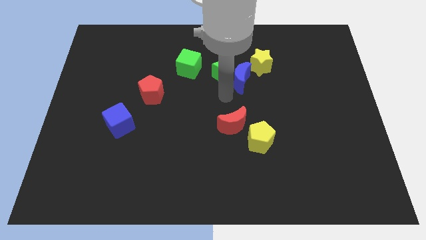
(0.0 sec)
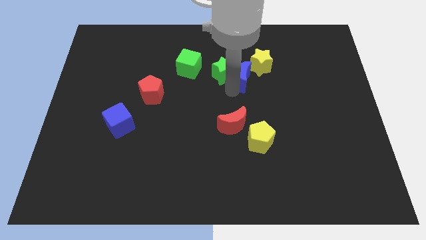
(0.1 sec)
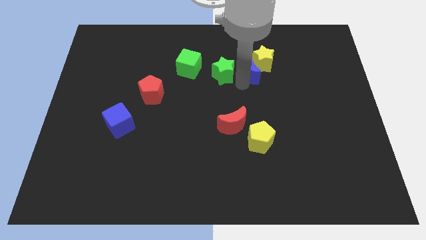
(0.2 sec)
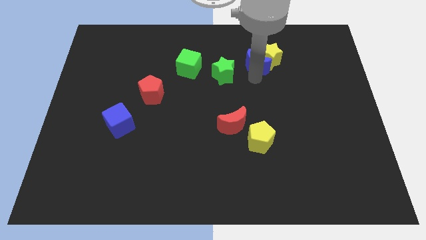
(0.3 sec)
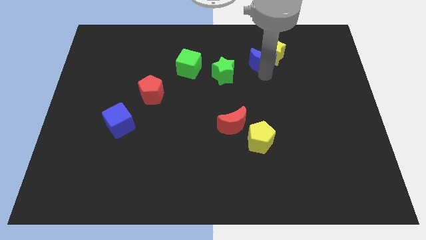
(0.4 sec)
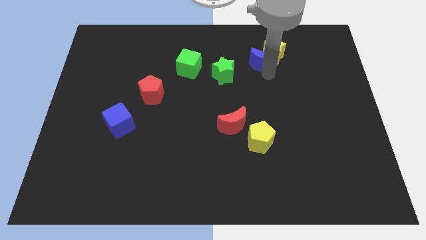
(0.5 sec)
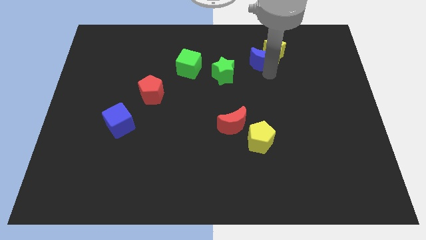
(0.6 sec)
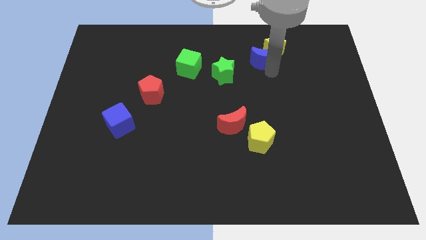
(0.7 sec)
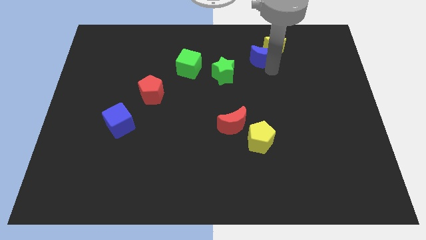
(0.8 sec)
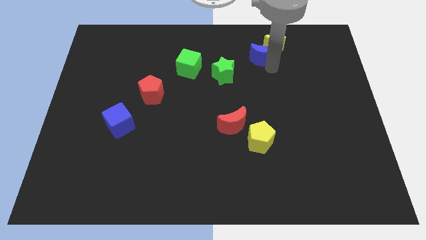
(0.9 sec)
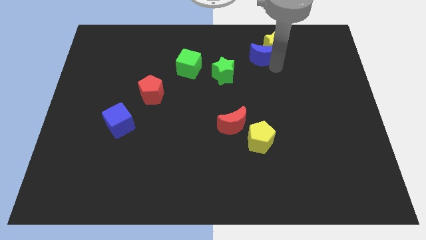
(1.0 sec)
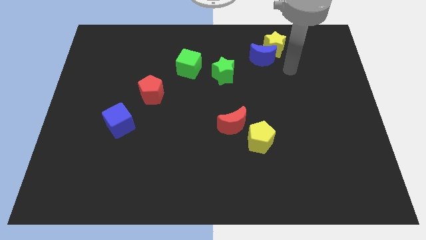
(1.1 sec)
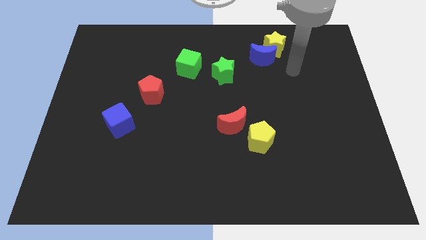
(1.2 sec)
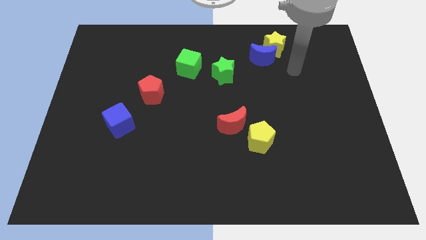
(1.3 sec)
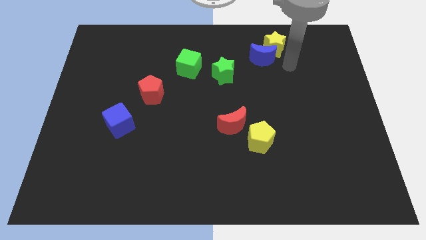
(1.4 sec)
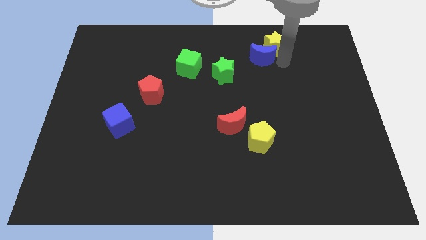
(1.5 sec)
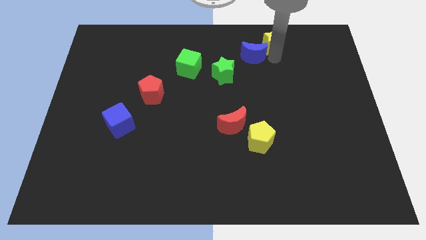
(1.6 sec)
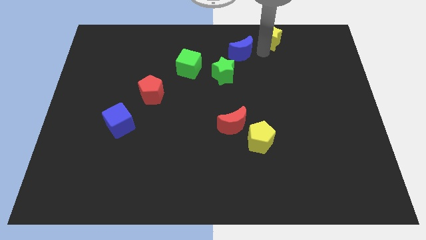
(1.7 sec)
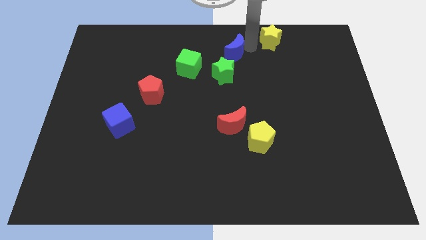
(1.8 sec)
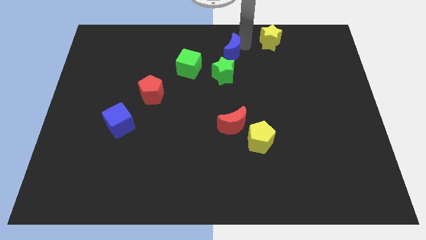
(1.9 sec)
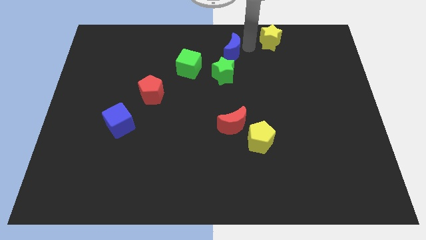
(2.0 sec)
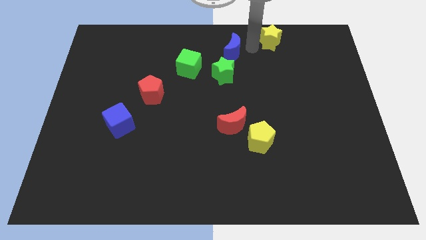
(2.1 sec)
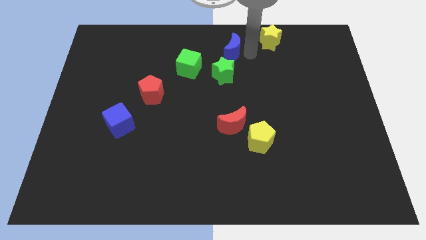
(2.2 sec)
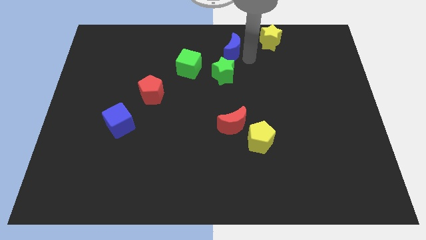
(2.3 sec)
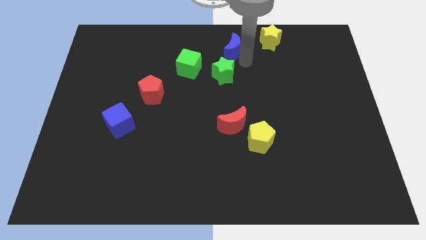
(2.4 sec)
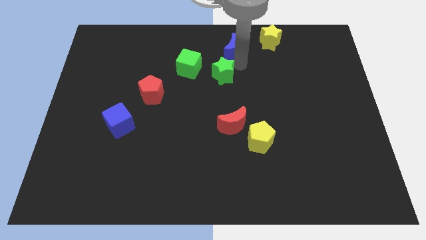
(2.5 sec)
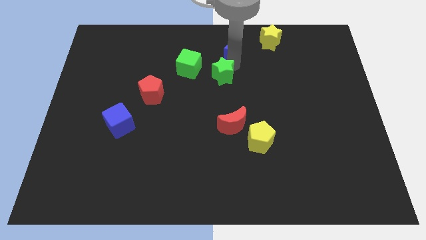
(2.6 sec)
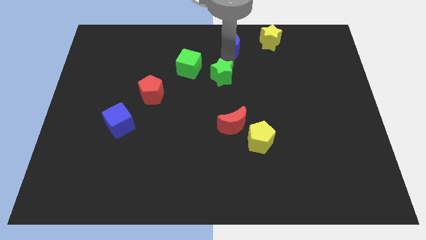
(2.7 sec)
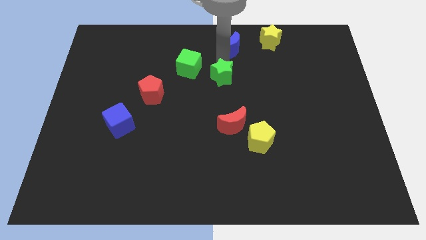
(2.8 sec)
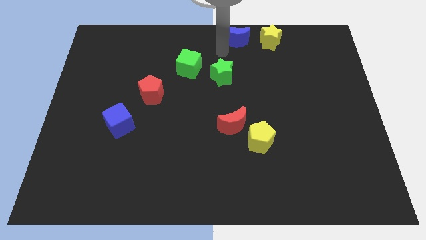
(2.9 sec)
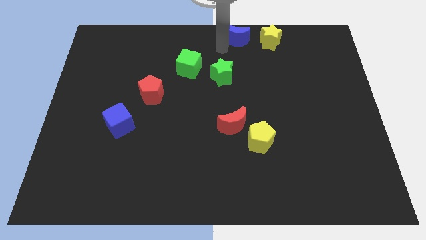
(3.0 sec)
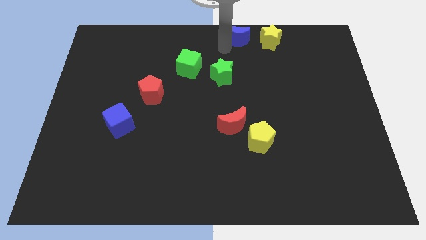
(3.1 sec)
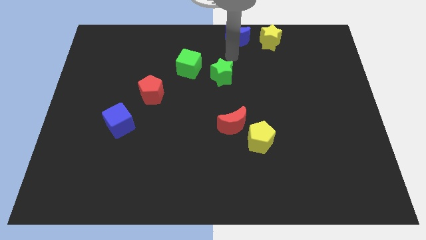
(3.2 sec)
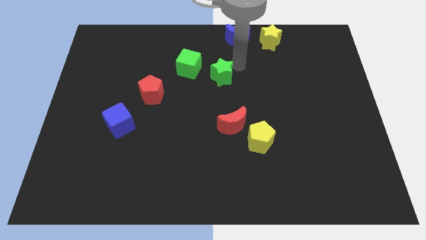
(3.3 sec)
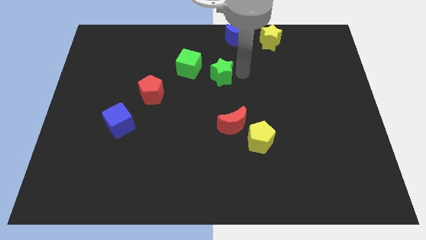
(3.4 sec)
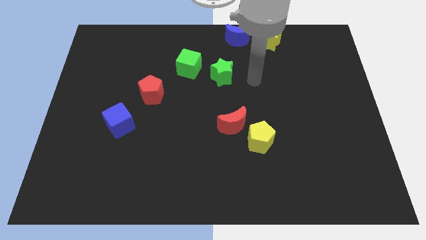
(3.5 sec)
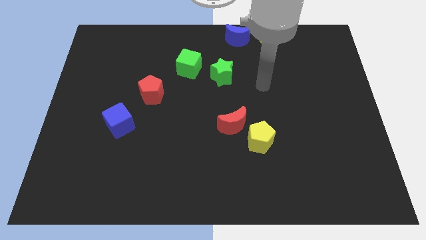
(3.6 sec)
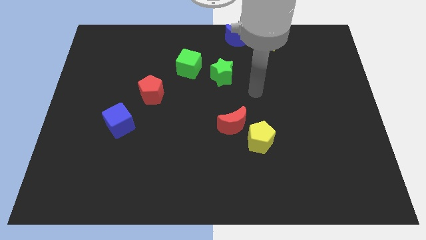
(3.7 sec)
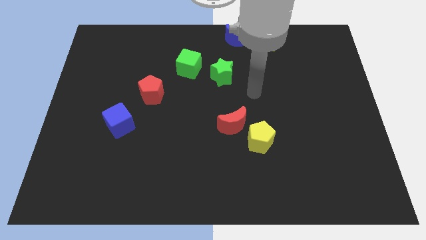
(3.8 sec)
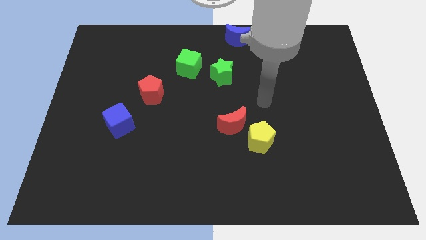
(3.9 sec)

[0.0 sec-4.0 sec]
place the blue moon left to the yellow star

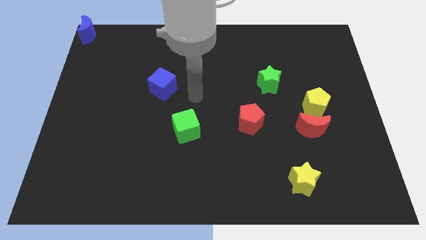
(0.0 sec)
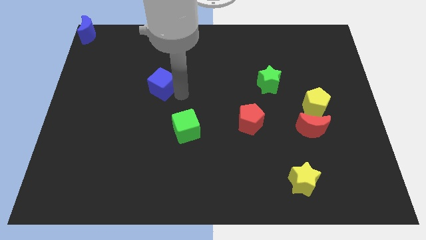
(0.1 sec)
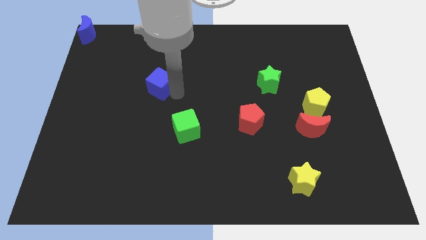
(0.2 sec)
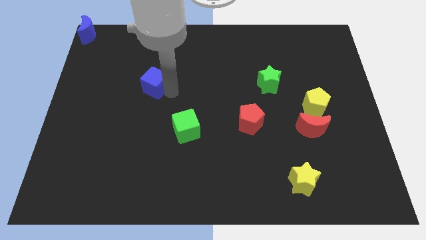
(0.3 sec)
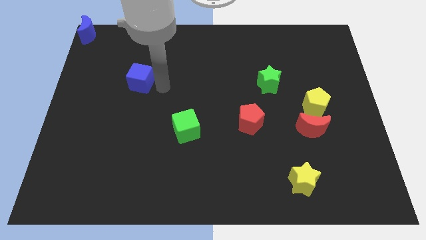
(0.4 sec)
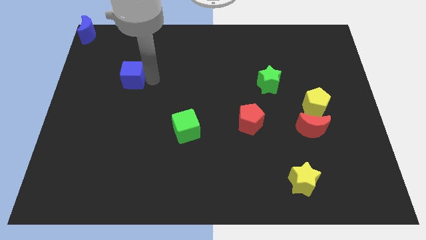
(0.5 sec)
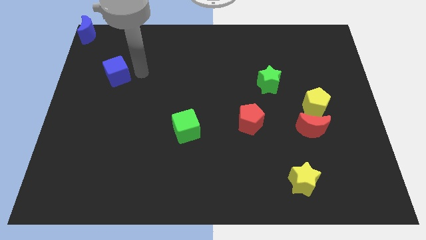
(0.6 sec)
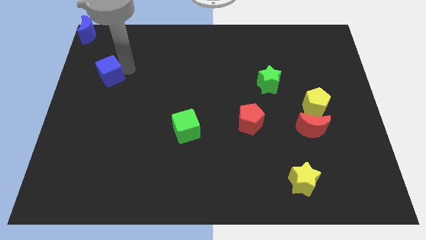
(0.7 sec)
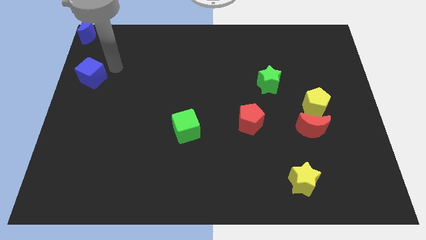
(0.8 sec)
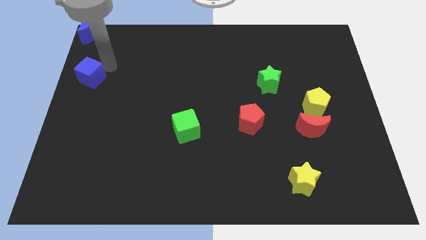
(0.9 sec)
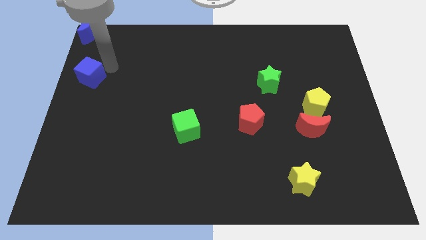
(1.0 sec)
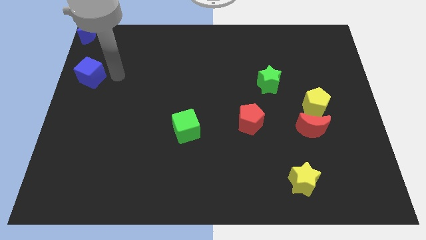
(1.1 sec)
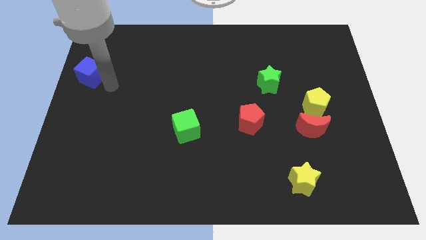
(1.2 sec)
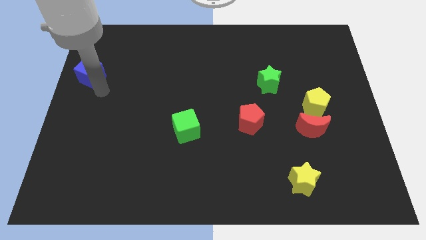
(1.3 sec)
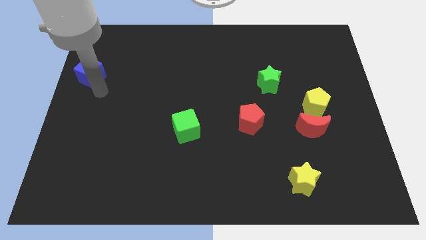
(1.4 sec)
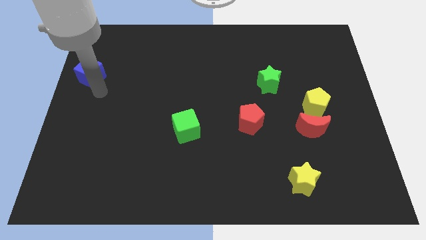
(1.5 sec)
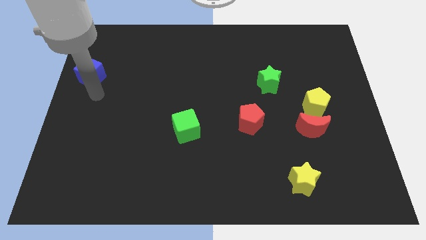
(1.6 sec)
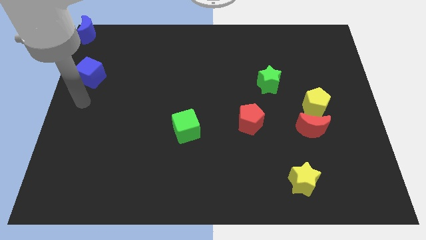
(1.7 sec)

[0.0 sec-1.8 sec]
move the blue cube to the bottom right side of the blue moon

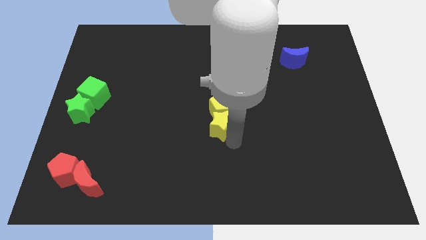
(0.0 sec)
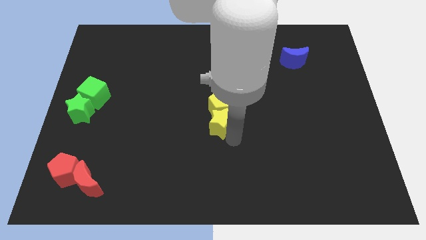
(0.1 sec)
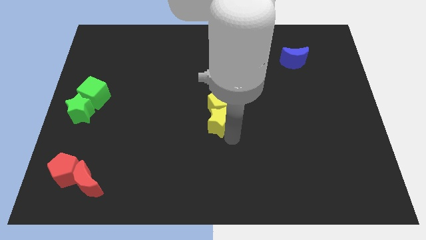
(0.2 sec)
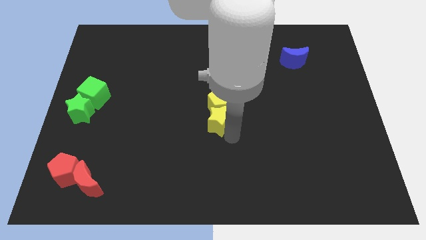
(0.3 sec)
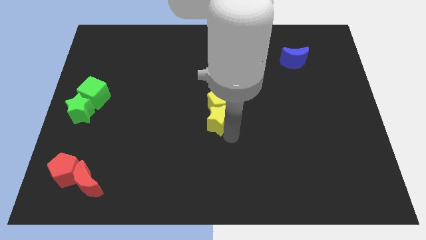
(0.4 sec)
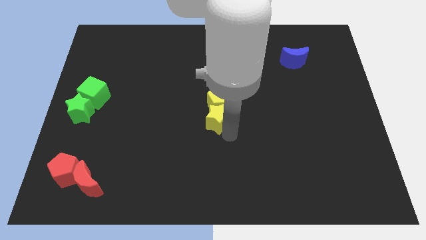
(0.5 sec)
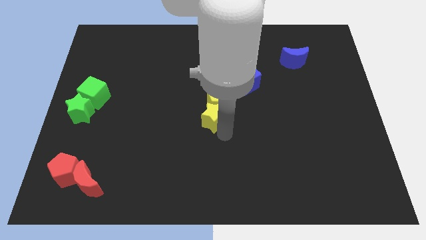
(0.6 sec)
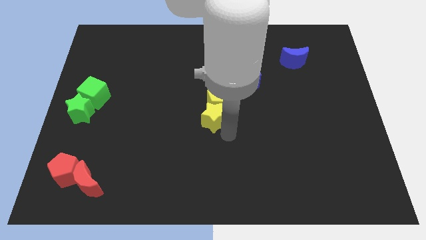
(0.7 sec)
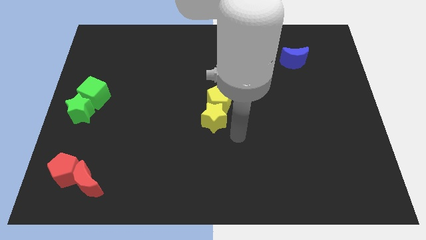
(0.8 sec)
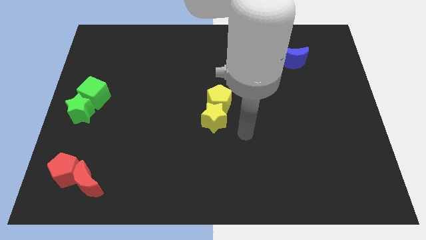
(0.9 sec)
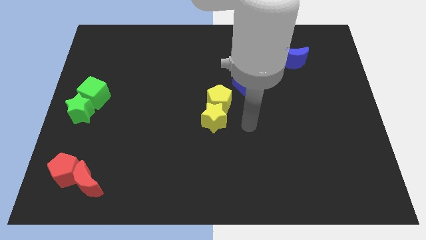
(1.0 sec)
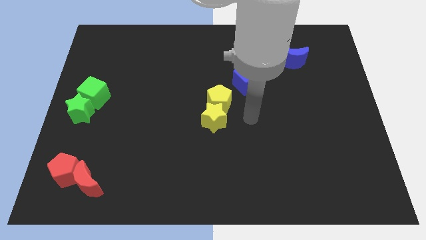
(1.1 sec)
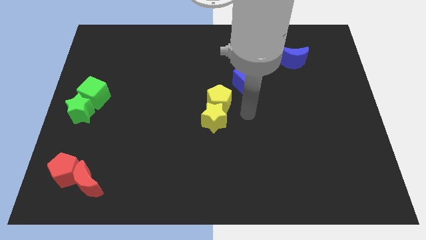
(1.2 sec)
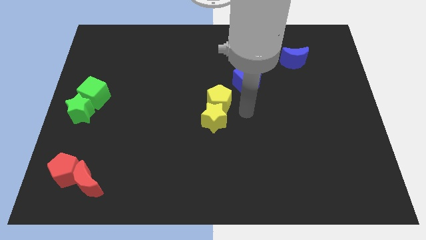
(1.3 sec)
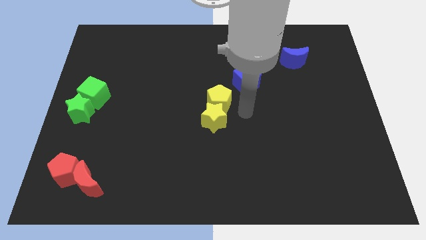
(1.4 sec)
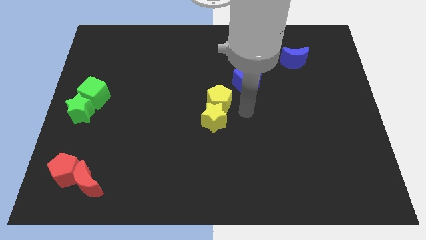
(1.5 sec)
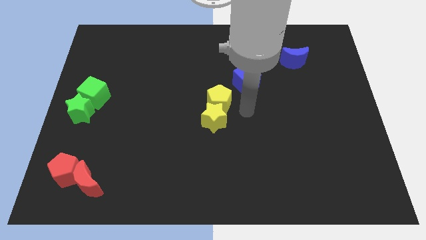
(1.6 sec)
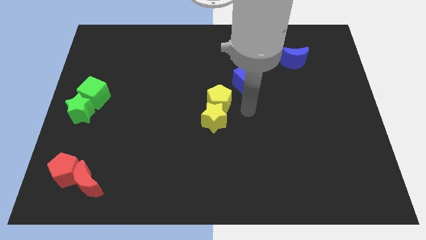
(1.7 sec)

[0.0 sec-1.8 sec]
move the yellow blocks slightly up

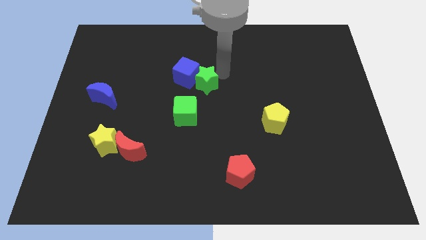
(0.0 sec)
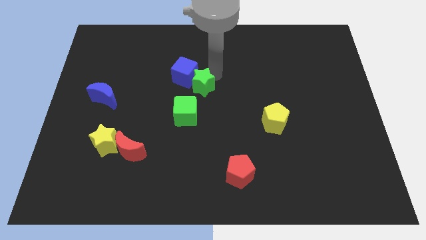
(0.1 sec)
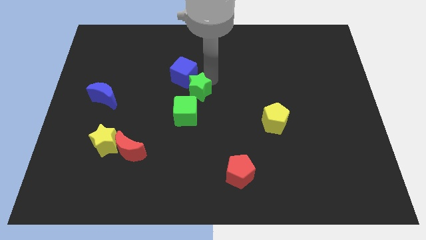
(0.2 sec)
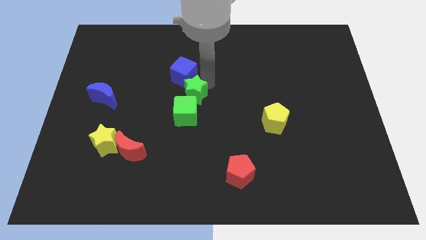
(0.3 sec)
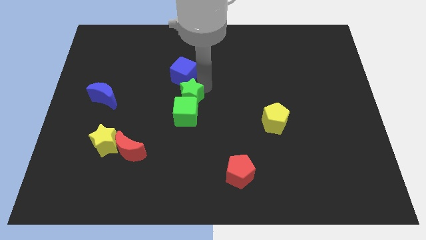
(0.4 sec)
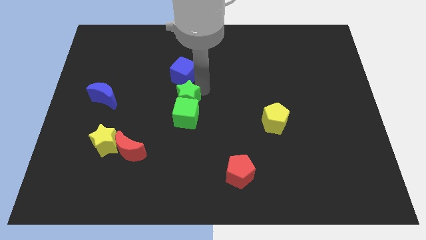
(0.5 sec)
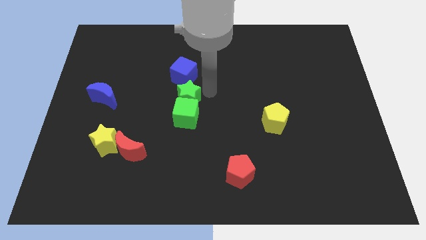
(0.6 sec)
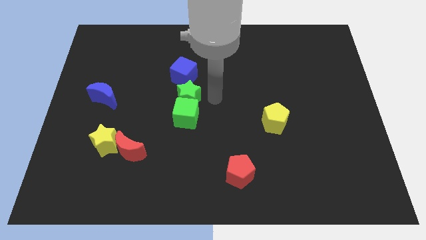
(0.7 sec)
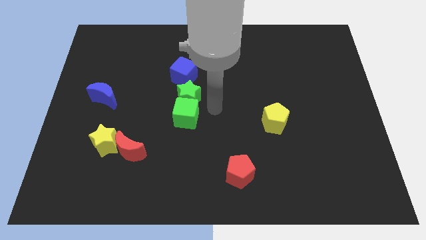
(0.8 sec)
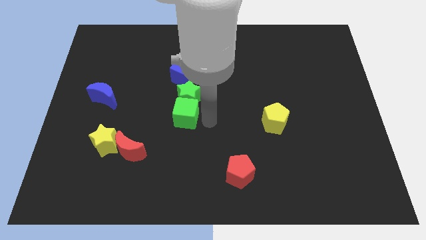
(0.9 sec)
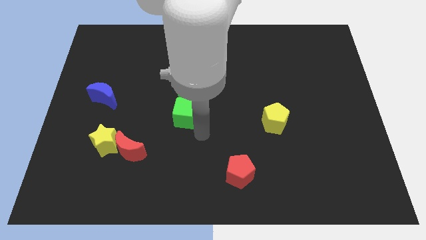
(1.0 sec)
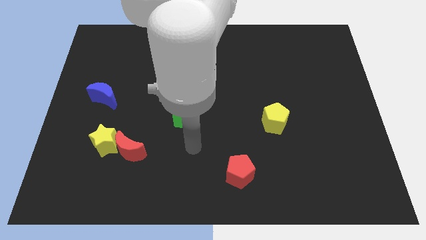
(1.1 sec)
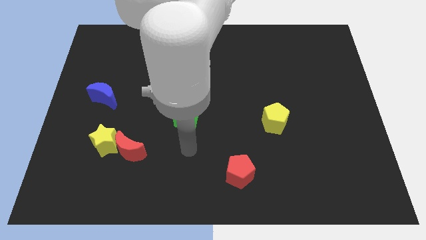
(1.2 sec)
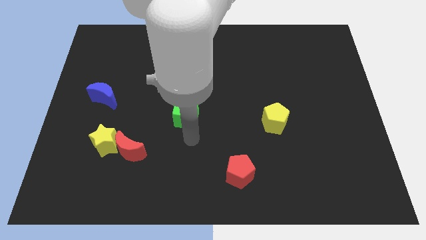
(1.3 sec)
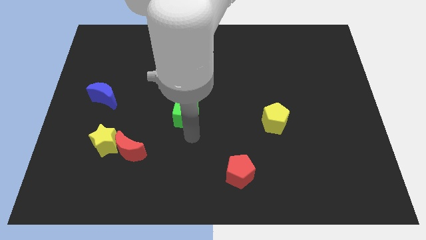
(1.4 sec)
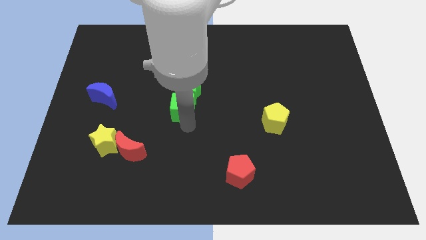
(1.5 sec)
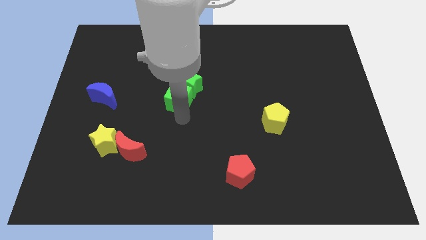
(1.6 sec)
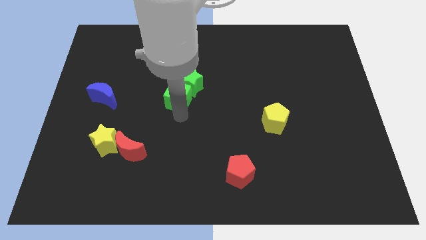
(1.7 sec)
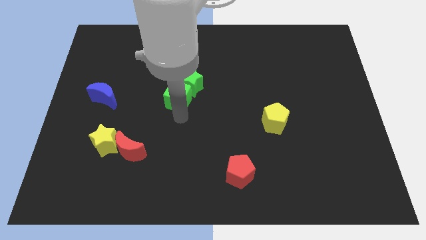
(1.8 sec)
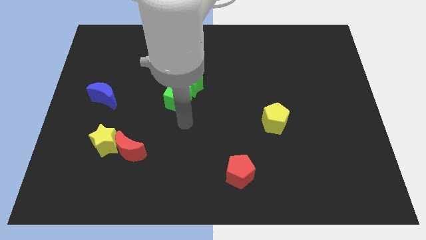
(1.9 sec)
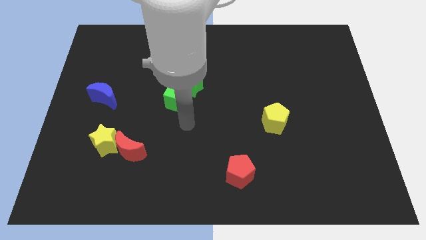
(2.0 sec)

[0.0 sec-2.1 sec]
slightly push green cube upwards
